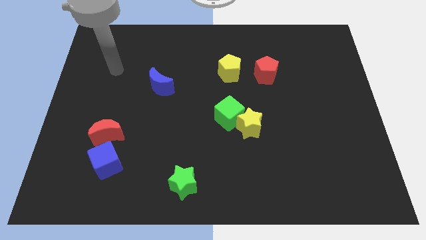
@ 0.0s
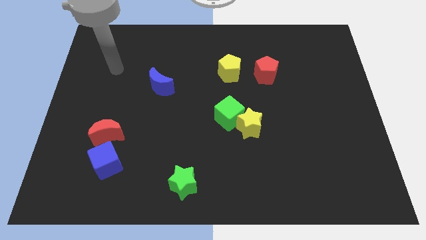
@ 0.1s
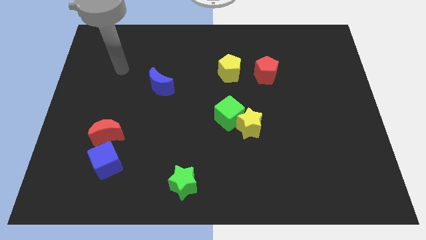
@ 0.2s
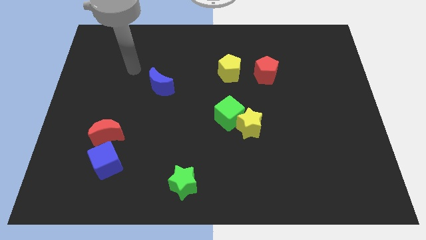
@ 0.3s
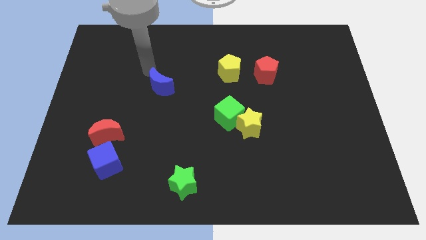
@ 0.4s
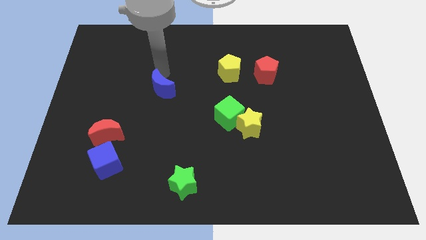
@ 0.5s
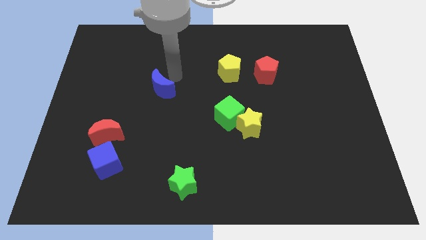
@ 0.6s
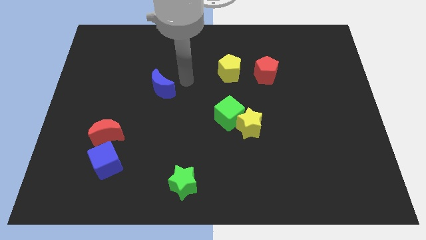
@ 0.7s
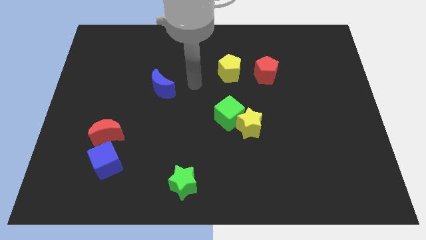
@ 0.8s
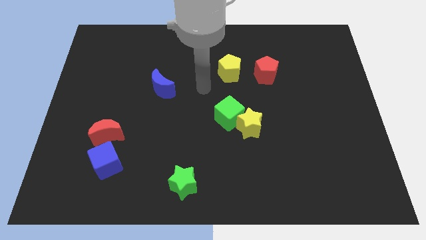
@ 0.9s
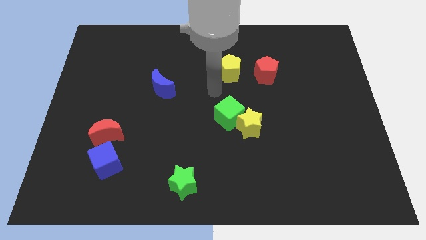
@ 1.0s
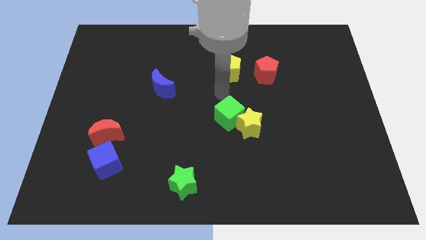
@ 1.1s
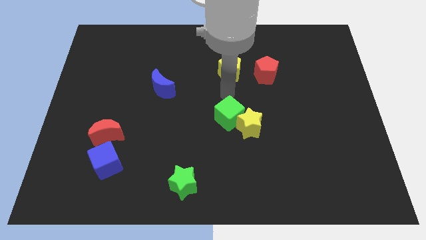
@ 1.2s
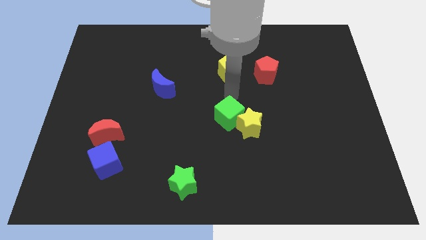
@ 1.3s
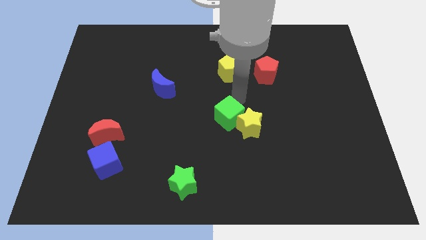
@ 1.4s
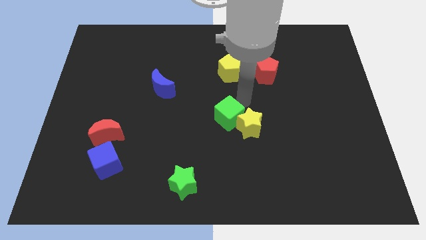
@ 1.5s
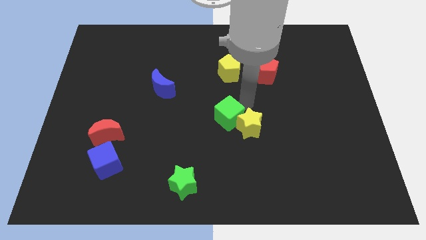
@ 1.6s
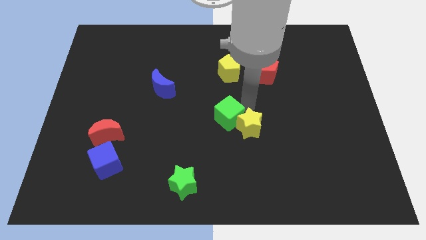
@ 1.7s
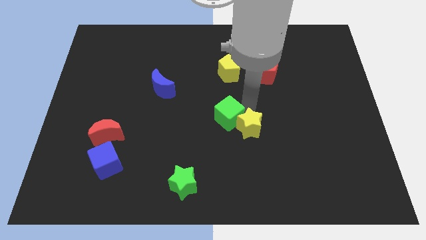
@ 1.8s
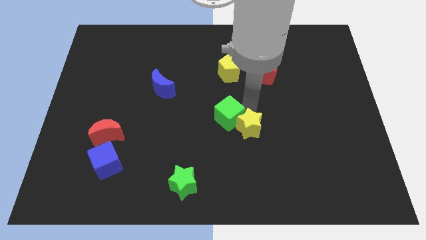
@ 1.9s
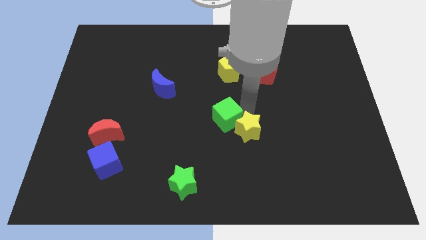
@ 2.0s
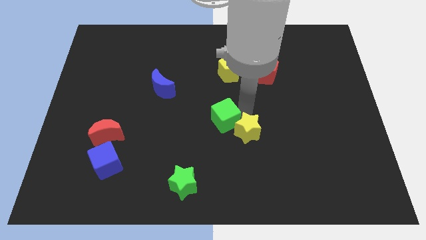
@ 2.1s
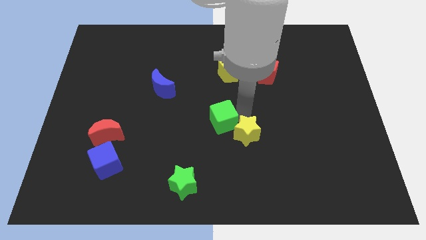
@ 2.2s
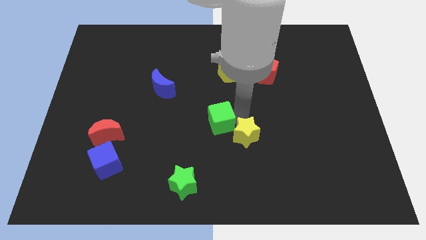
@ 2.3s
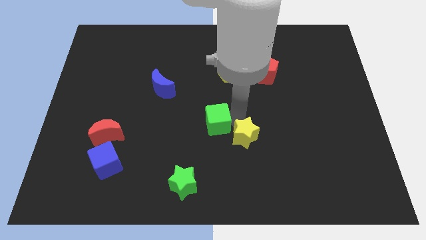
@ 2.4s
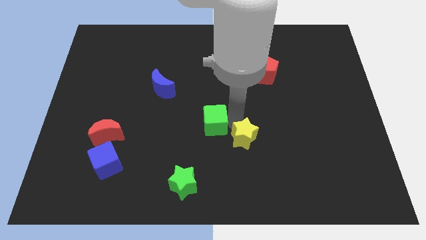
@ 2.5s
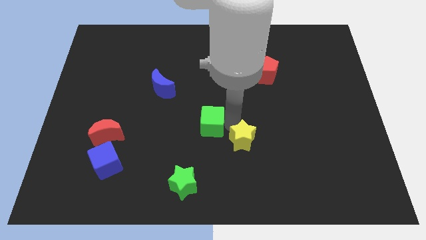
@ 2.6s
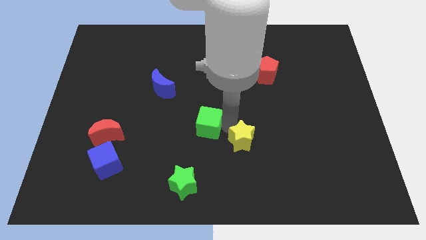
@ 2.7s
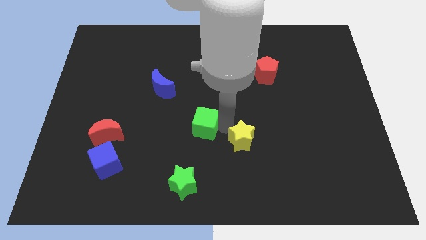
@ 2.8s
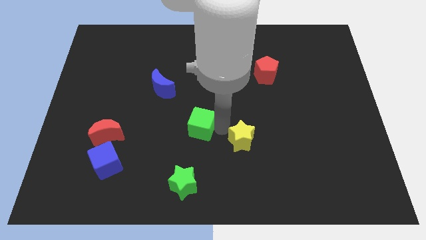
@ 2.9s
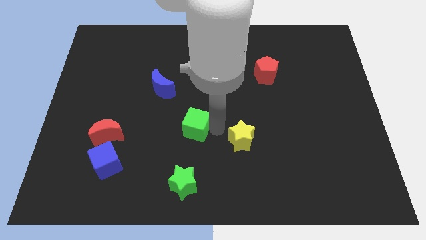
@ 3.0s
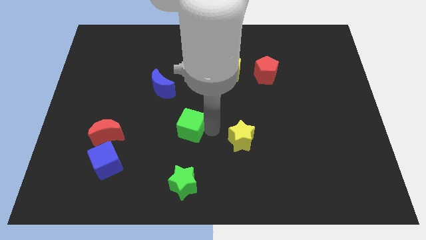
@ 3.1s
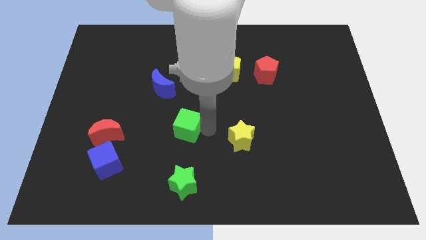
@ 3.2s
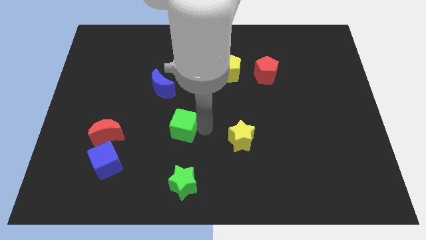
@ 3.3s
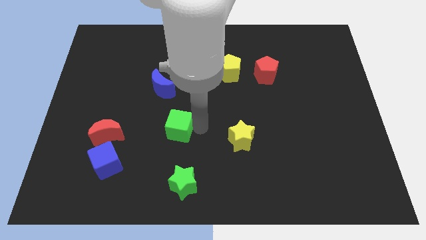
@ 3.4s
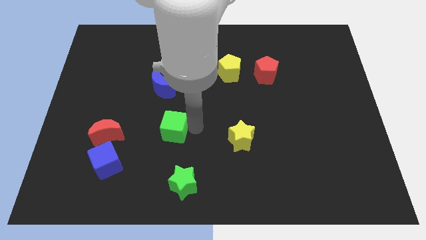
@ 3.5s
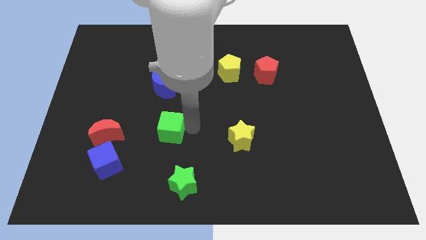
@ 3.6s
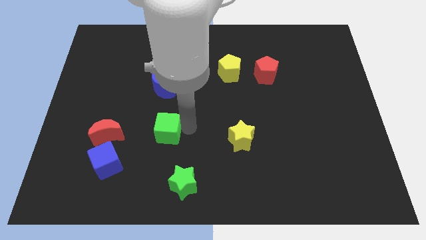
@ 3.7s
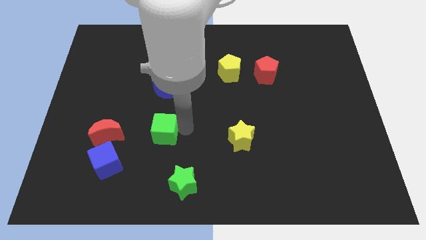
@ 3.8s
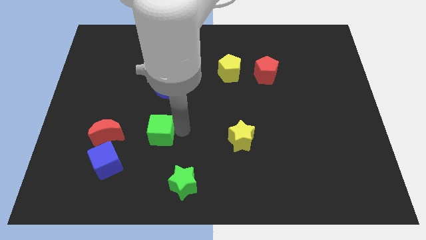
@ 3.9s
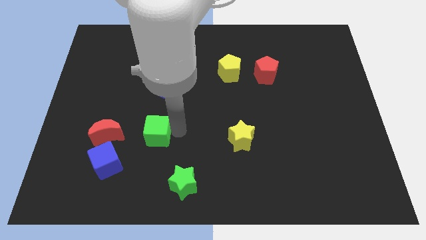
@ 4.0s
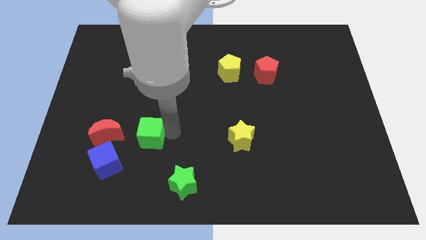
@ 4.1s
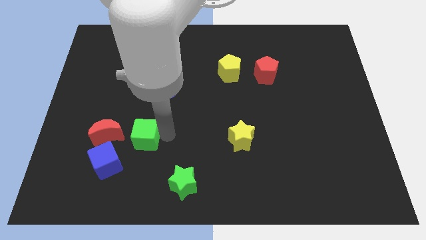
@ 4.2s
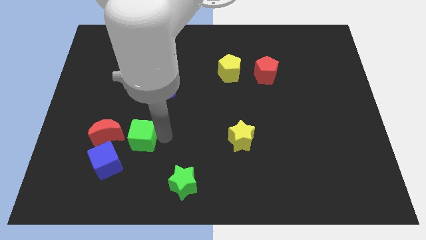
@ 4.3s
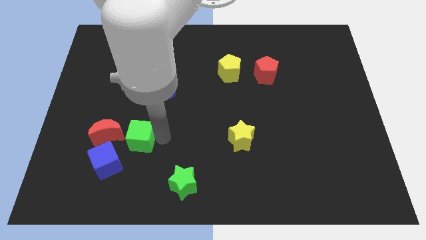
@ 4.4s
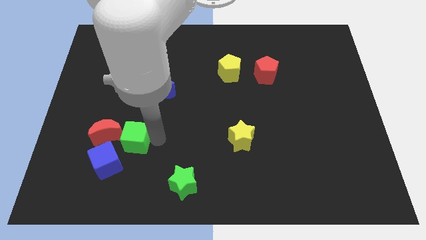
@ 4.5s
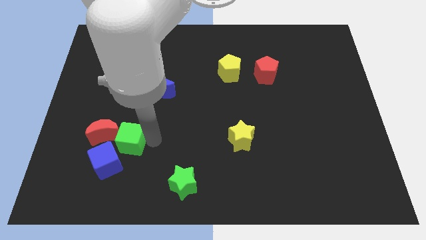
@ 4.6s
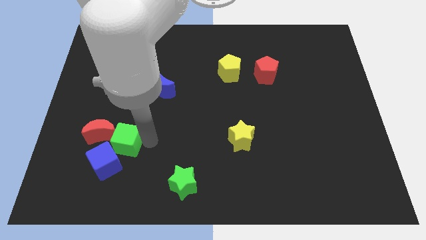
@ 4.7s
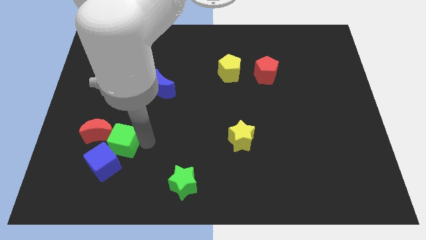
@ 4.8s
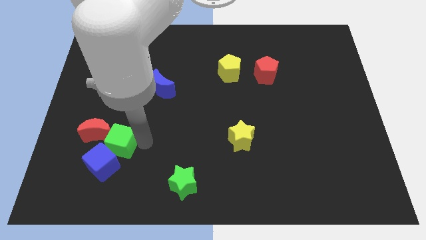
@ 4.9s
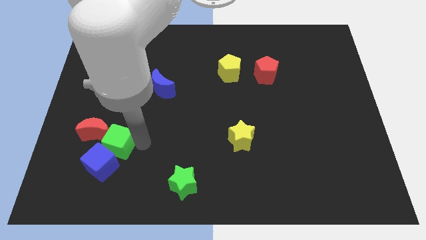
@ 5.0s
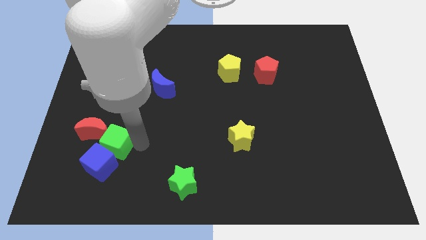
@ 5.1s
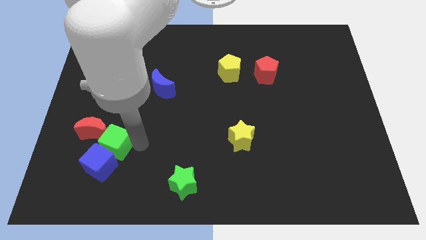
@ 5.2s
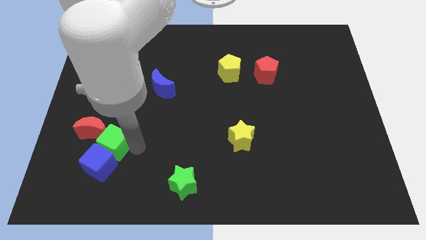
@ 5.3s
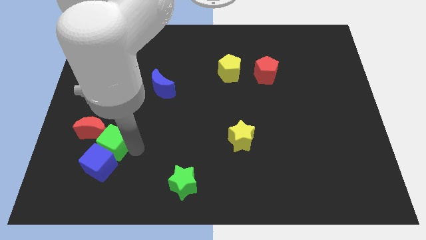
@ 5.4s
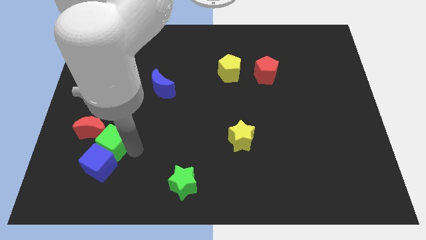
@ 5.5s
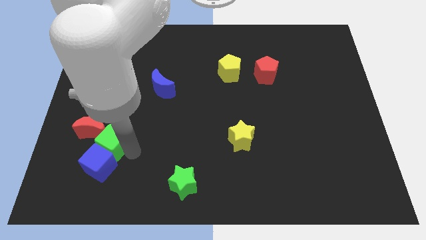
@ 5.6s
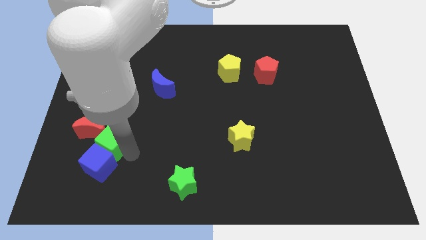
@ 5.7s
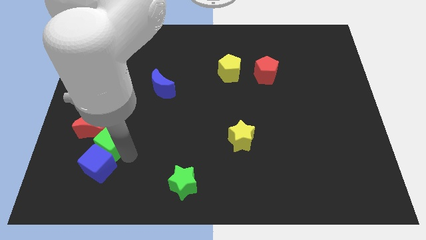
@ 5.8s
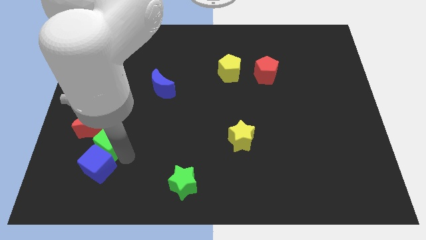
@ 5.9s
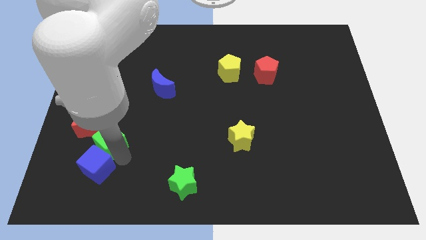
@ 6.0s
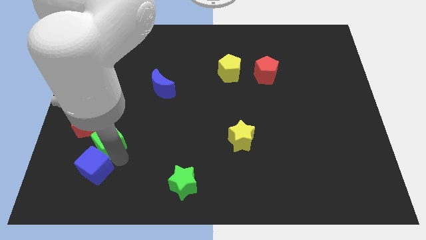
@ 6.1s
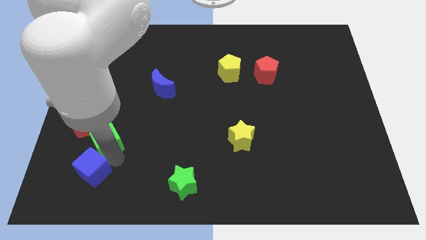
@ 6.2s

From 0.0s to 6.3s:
slide the green cube to the red moon

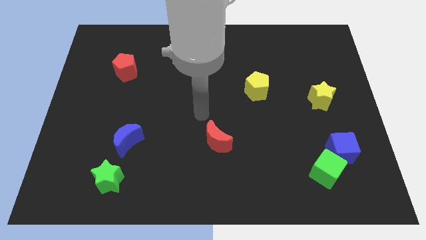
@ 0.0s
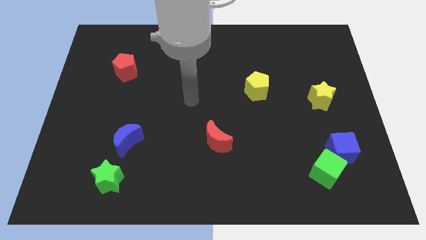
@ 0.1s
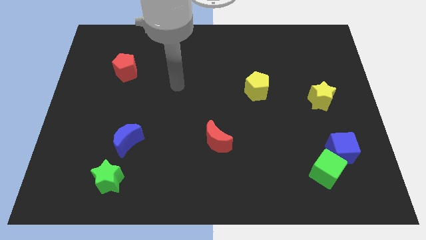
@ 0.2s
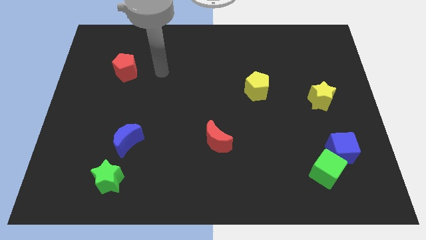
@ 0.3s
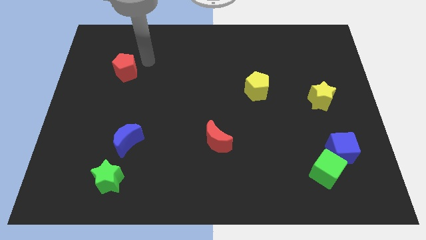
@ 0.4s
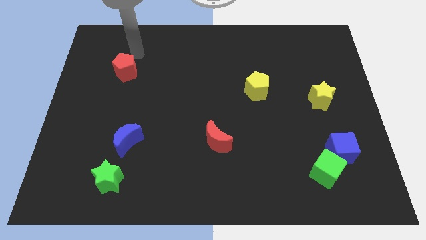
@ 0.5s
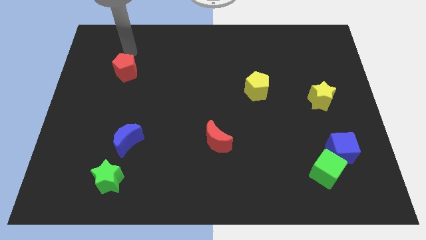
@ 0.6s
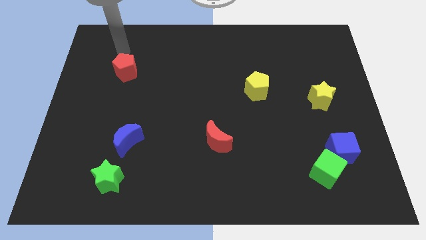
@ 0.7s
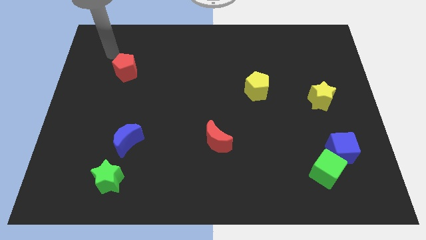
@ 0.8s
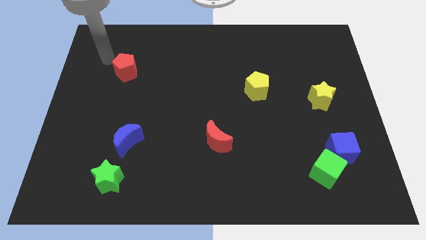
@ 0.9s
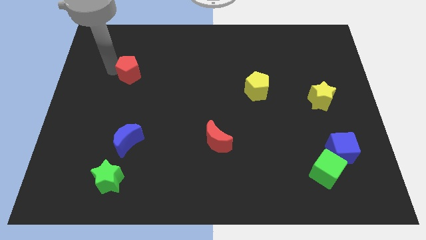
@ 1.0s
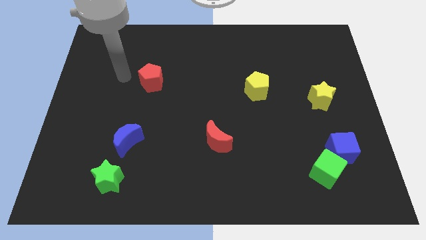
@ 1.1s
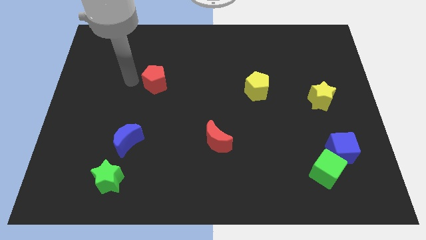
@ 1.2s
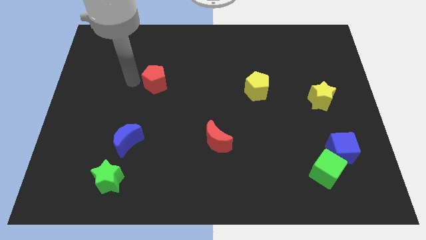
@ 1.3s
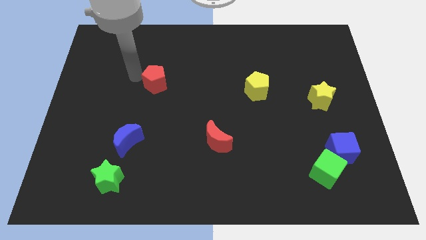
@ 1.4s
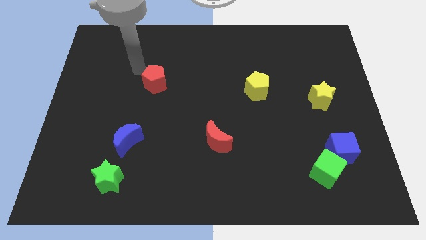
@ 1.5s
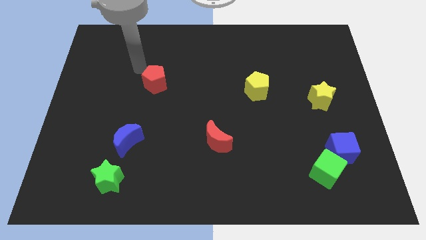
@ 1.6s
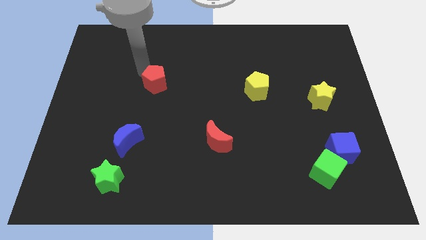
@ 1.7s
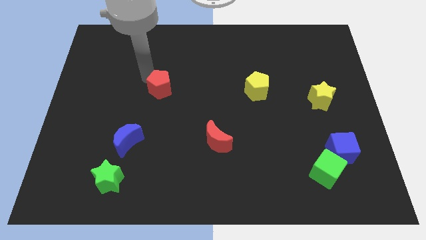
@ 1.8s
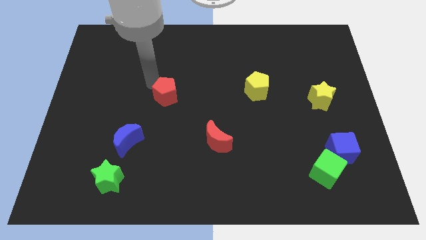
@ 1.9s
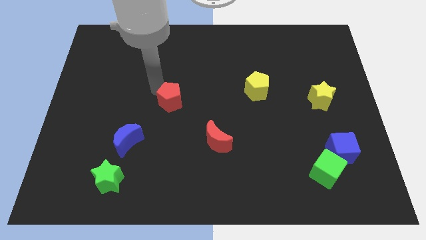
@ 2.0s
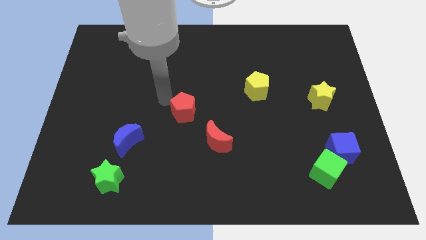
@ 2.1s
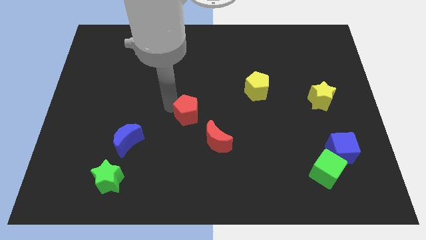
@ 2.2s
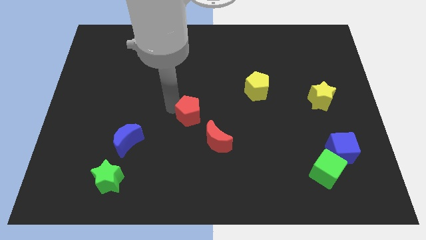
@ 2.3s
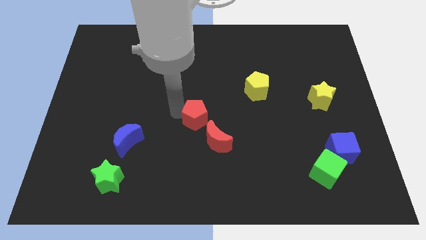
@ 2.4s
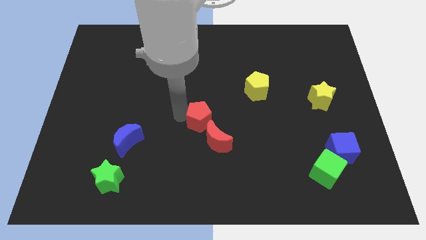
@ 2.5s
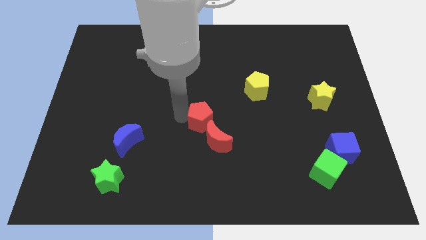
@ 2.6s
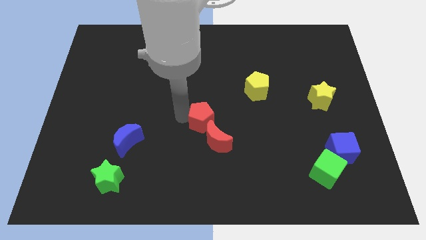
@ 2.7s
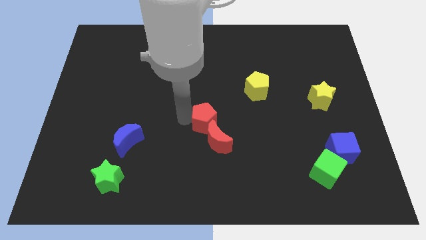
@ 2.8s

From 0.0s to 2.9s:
push the red pentagon to the red moon
